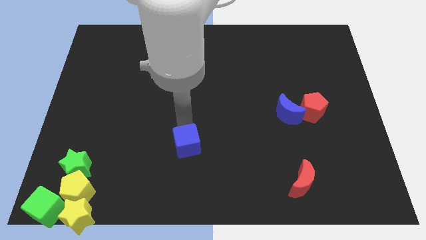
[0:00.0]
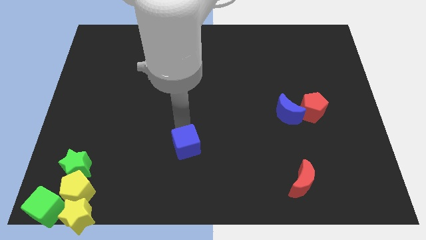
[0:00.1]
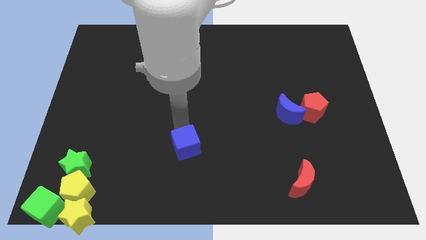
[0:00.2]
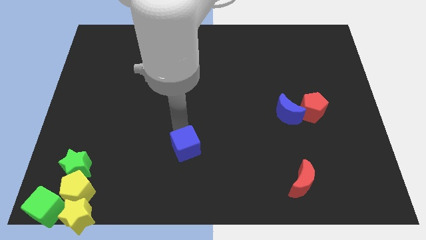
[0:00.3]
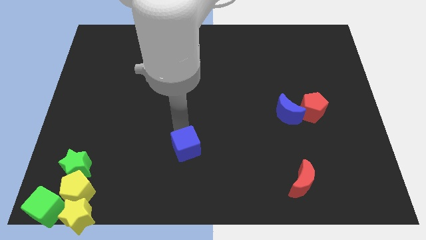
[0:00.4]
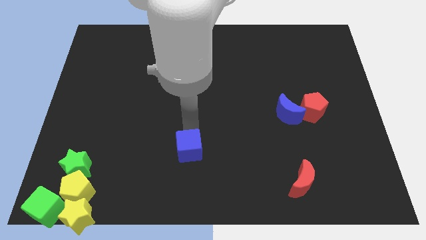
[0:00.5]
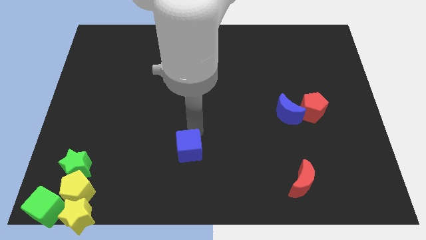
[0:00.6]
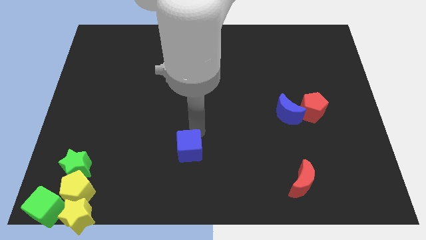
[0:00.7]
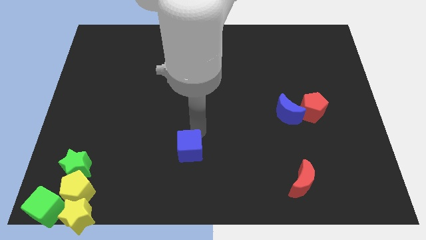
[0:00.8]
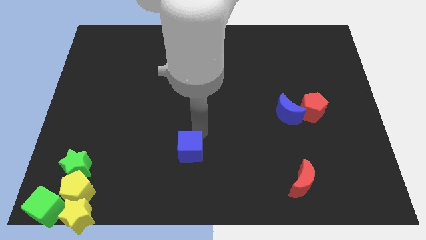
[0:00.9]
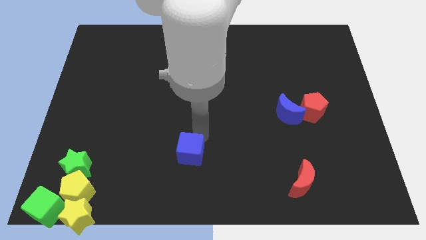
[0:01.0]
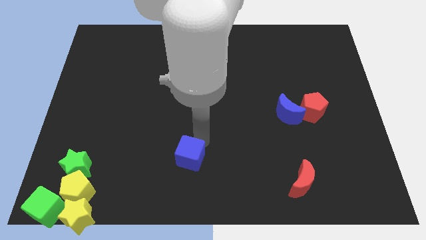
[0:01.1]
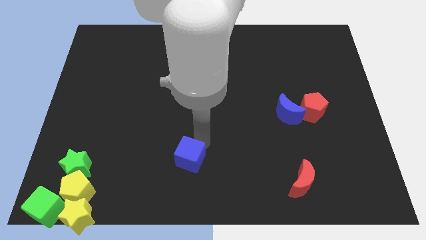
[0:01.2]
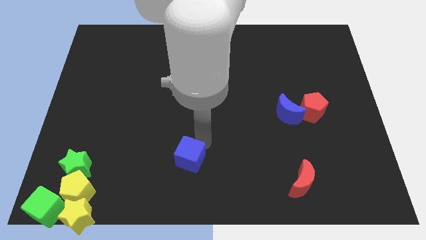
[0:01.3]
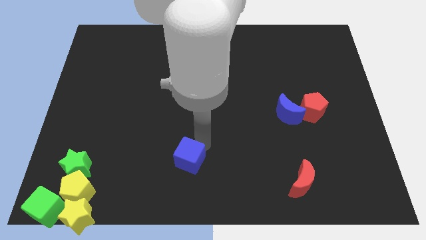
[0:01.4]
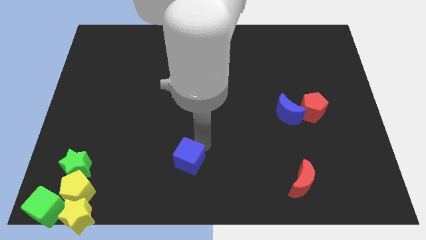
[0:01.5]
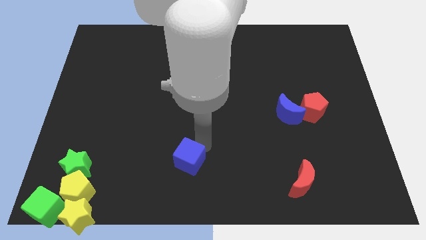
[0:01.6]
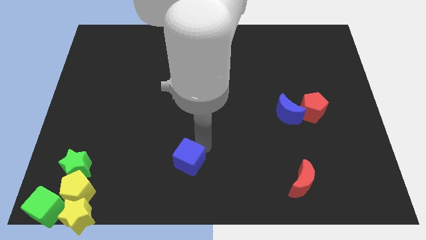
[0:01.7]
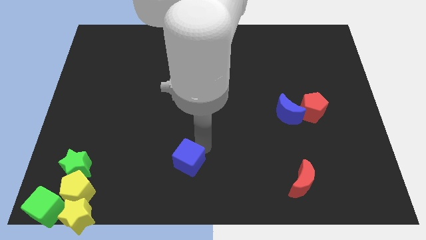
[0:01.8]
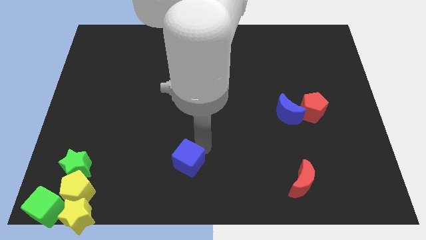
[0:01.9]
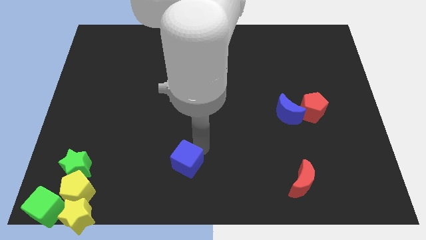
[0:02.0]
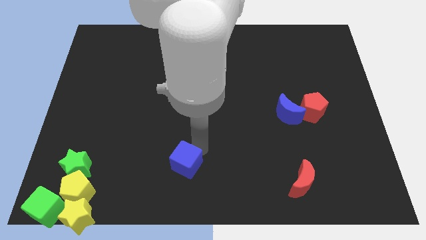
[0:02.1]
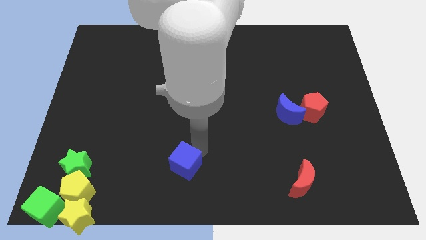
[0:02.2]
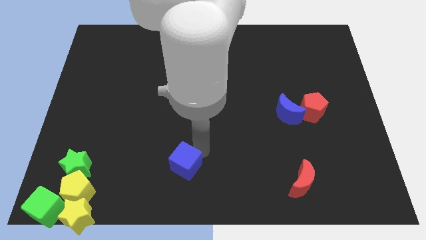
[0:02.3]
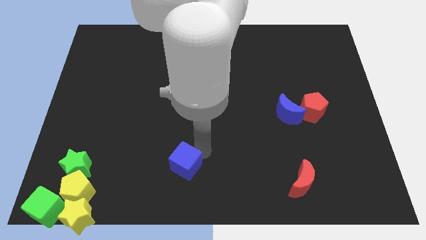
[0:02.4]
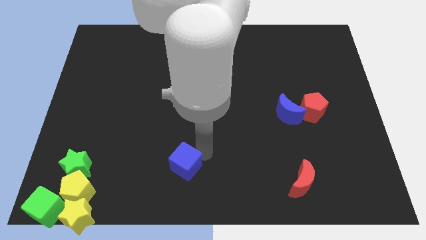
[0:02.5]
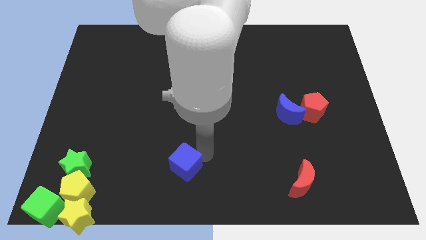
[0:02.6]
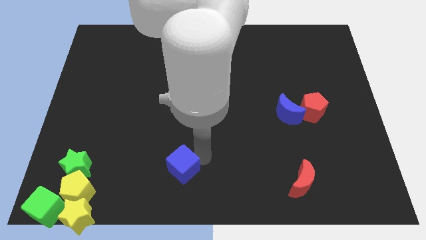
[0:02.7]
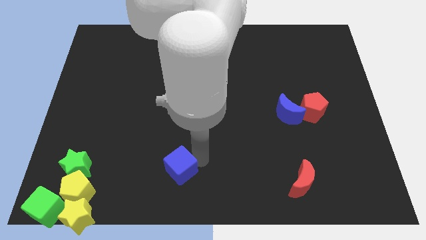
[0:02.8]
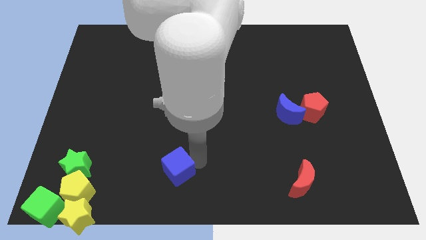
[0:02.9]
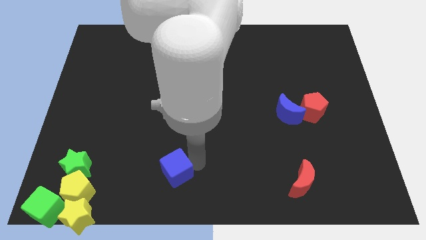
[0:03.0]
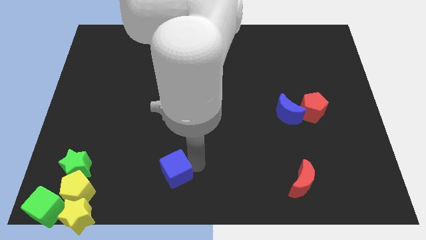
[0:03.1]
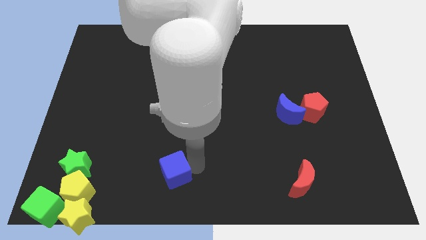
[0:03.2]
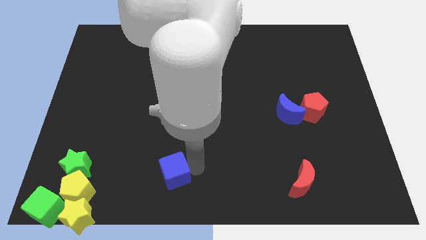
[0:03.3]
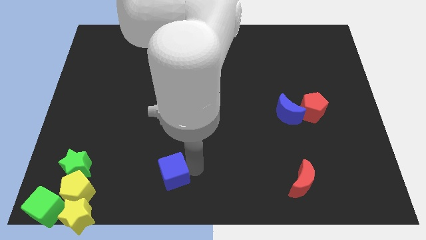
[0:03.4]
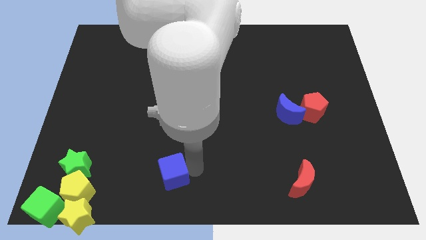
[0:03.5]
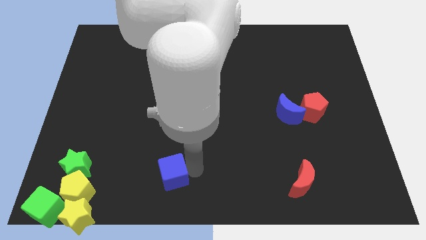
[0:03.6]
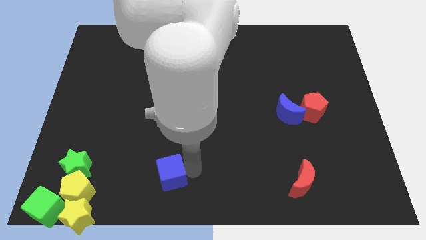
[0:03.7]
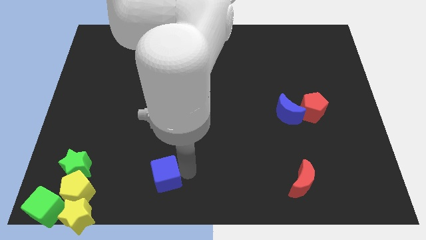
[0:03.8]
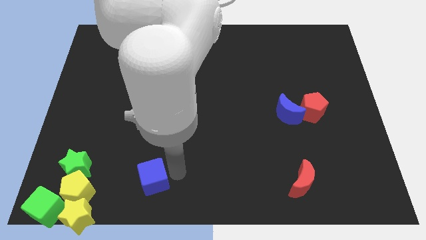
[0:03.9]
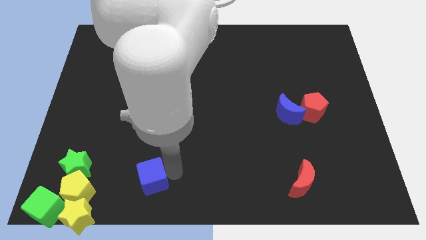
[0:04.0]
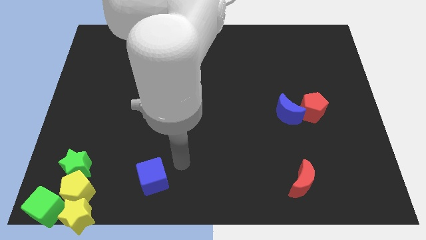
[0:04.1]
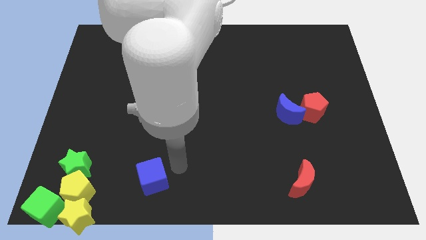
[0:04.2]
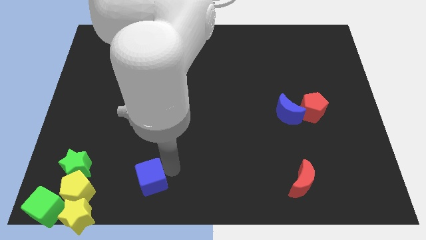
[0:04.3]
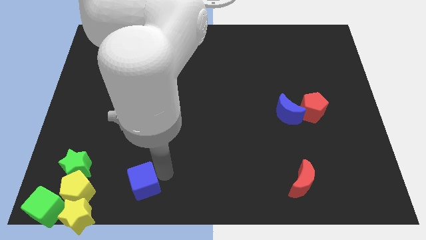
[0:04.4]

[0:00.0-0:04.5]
put the blue cube parallel right to the yellow pentagon

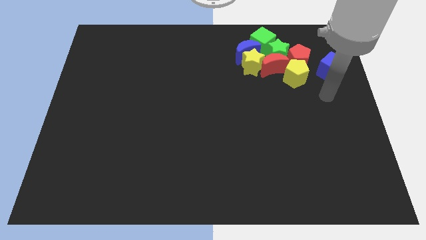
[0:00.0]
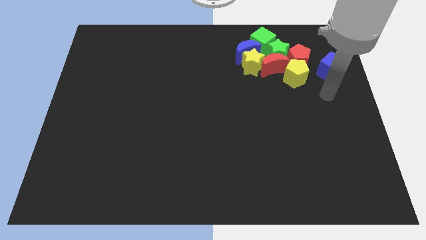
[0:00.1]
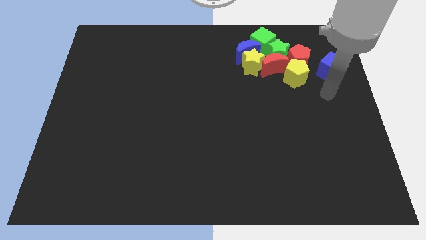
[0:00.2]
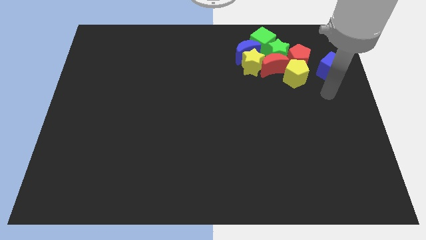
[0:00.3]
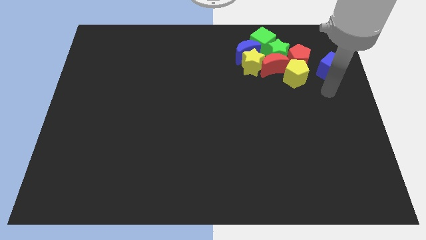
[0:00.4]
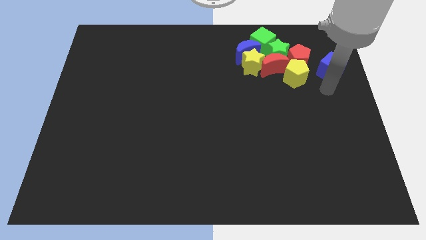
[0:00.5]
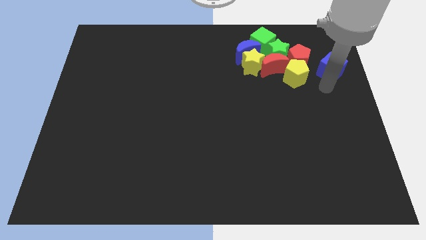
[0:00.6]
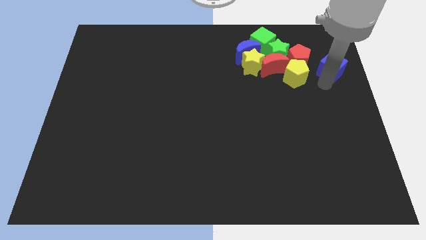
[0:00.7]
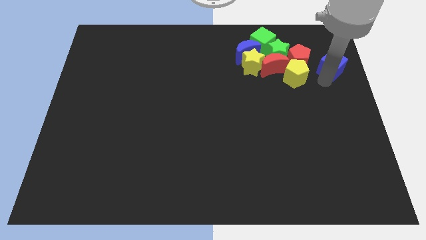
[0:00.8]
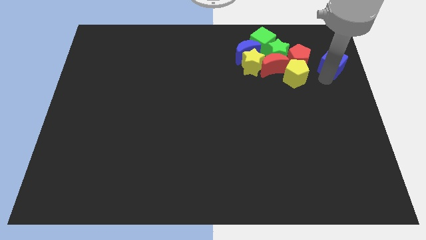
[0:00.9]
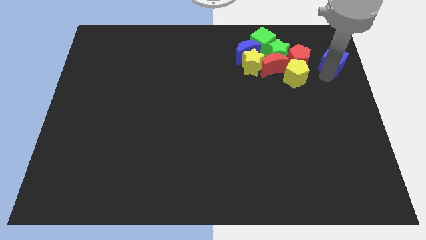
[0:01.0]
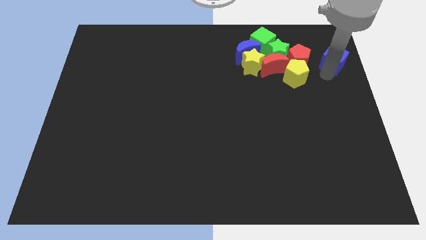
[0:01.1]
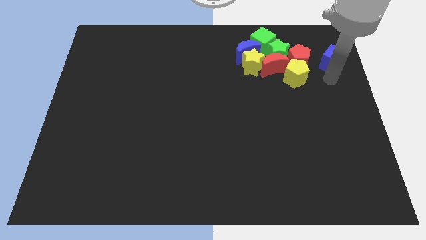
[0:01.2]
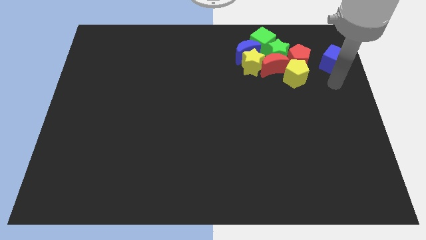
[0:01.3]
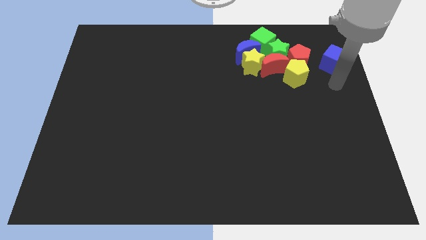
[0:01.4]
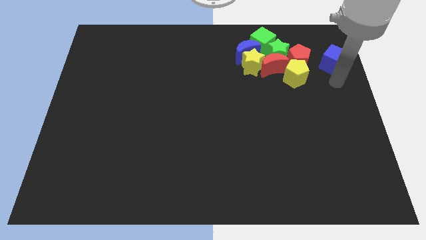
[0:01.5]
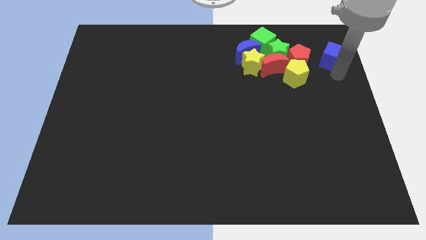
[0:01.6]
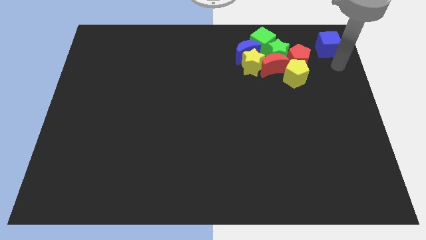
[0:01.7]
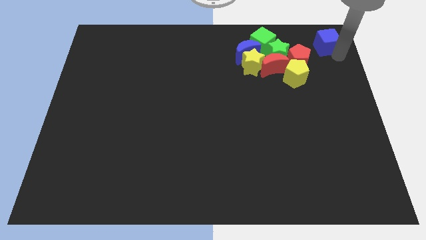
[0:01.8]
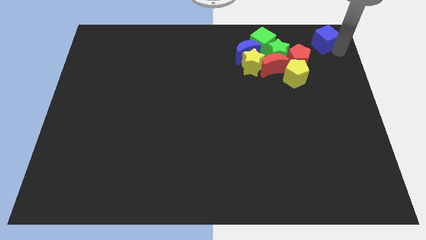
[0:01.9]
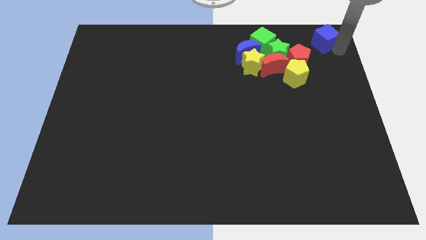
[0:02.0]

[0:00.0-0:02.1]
push the blue cube to the top right of the board

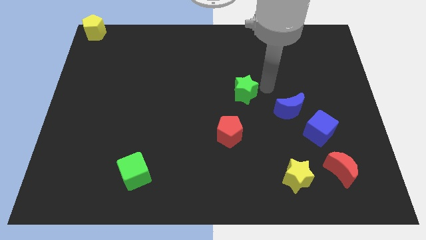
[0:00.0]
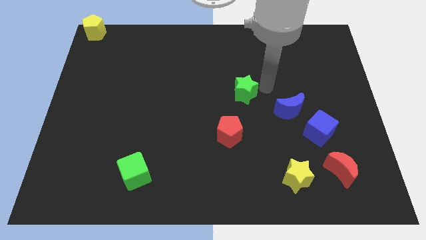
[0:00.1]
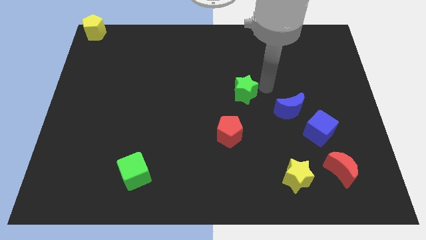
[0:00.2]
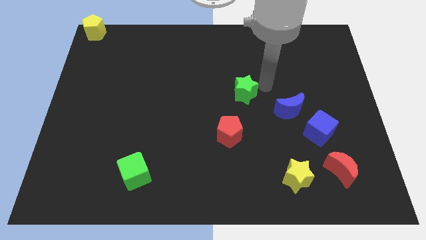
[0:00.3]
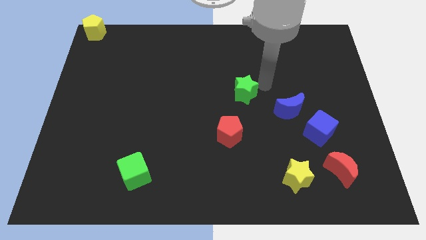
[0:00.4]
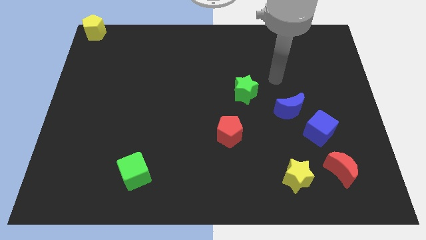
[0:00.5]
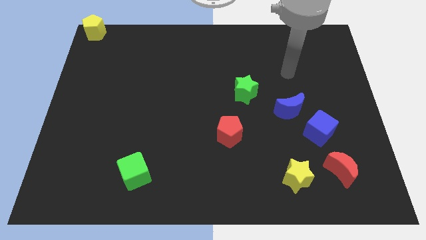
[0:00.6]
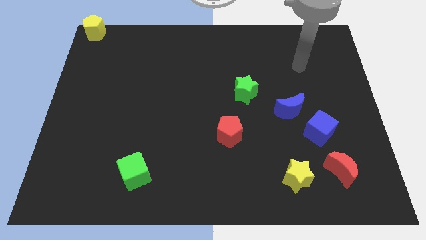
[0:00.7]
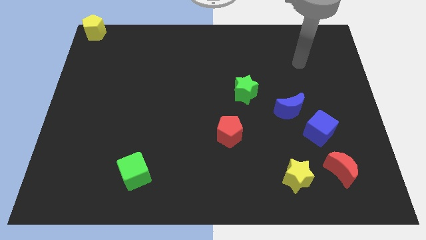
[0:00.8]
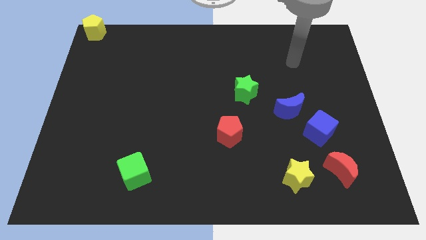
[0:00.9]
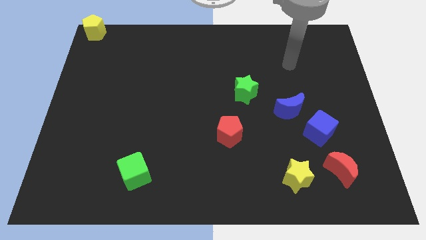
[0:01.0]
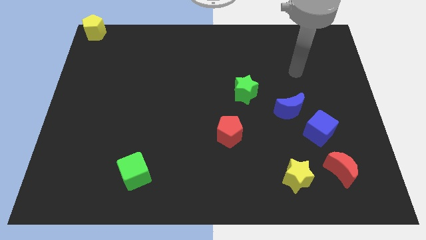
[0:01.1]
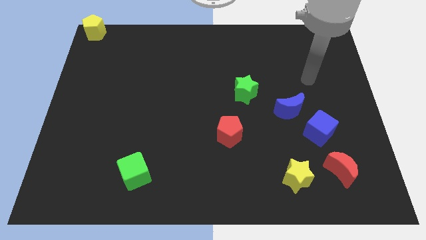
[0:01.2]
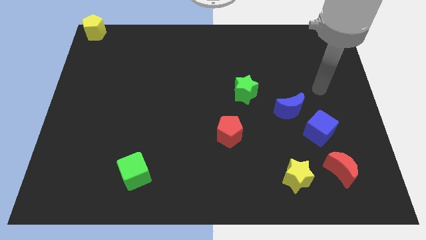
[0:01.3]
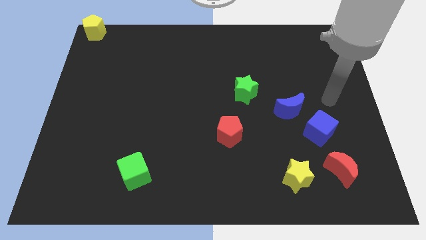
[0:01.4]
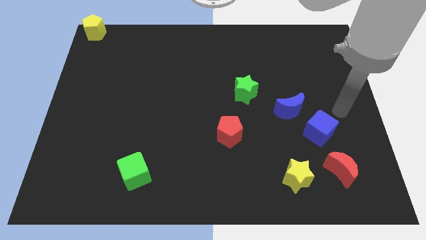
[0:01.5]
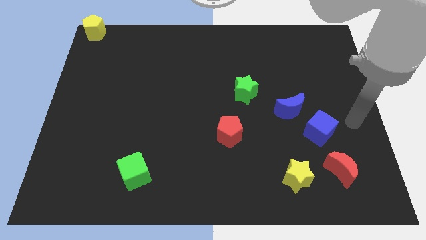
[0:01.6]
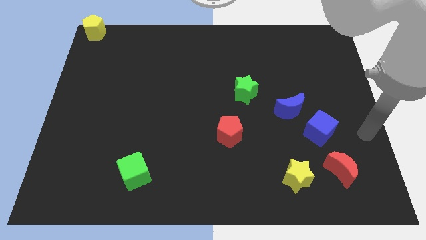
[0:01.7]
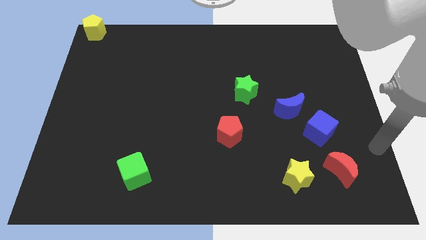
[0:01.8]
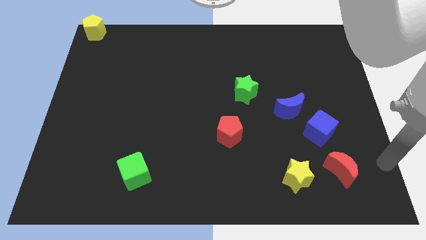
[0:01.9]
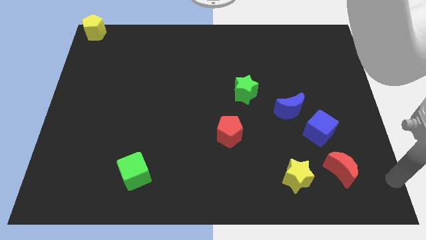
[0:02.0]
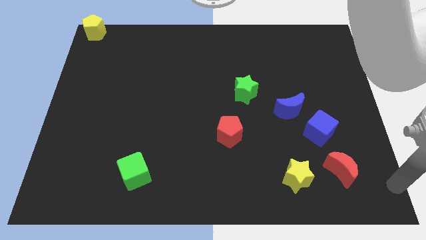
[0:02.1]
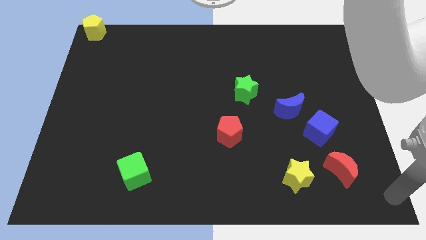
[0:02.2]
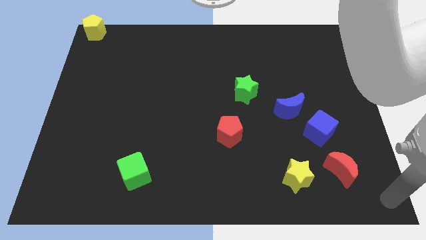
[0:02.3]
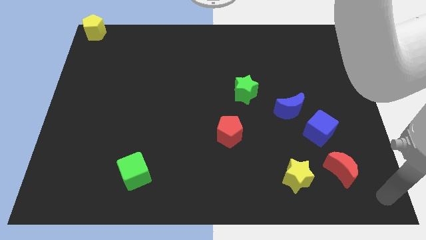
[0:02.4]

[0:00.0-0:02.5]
move your arm to the bottom right of the board
